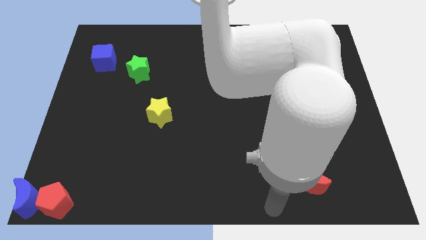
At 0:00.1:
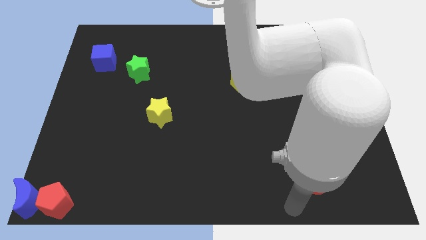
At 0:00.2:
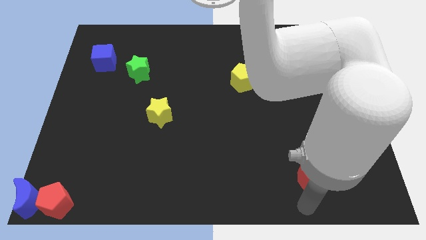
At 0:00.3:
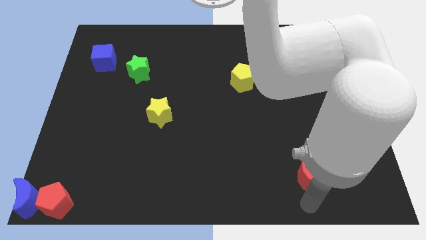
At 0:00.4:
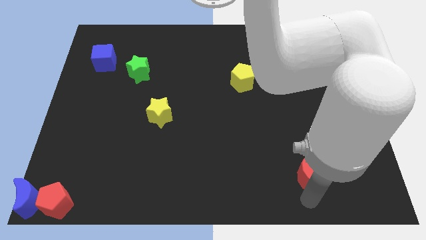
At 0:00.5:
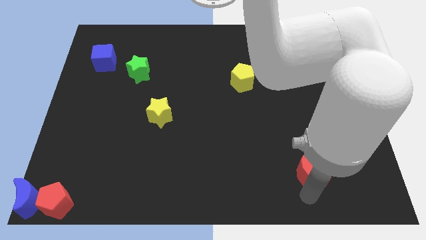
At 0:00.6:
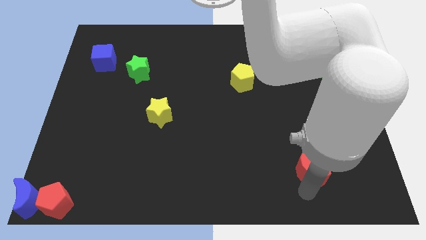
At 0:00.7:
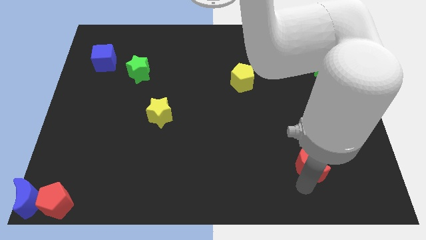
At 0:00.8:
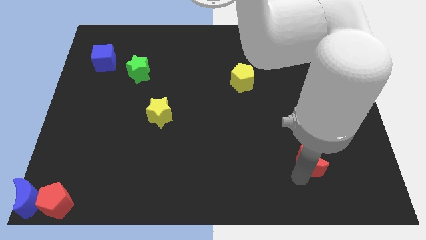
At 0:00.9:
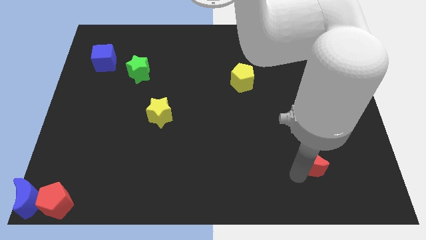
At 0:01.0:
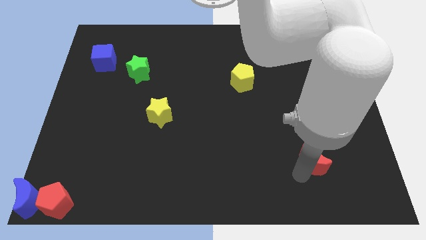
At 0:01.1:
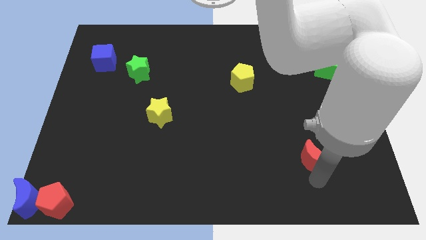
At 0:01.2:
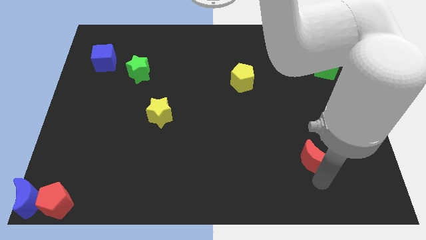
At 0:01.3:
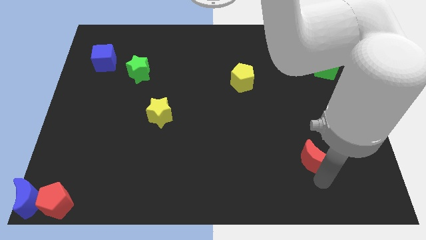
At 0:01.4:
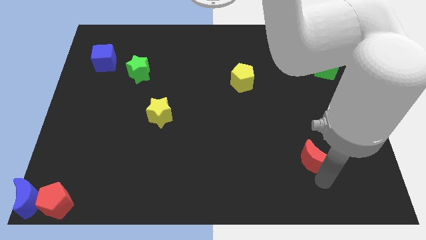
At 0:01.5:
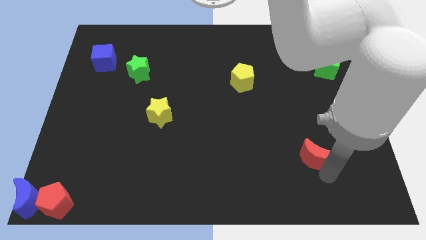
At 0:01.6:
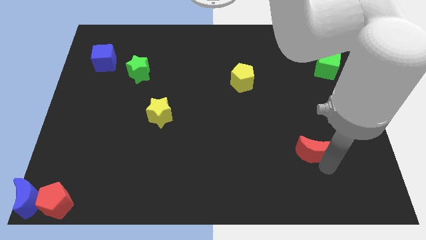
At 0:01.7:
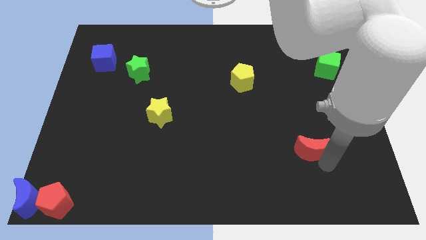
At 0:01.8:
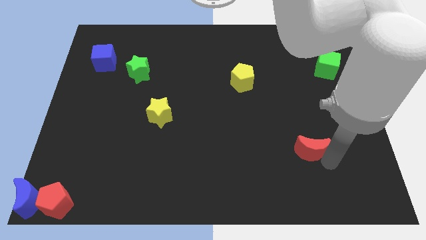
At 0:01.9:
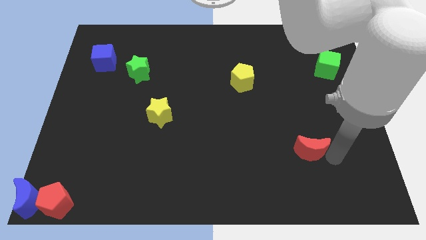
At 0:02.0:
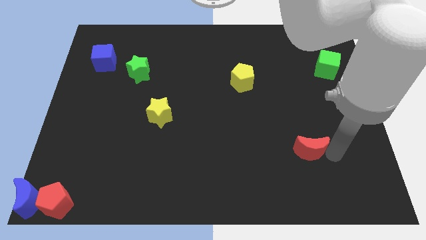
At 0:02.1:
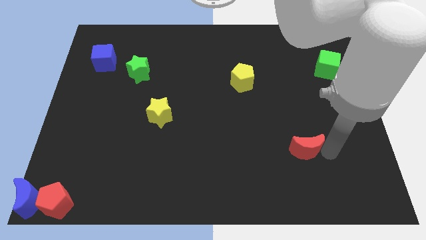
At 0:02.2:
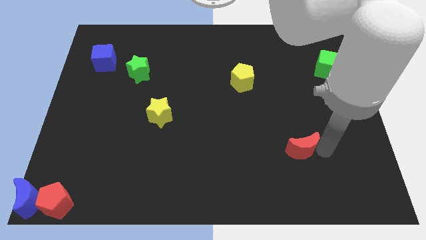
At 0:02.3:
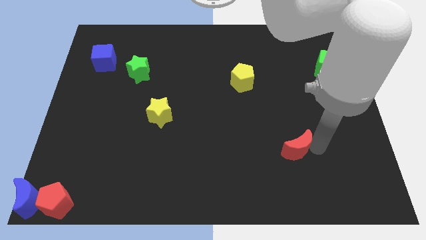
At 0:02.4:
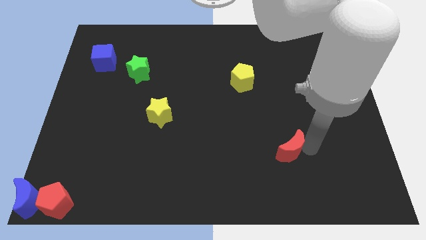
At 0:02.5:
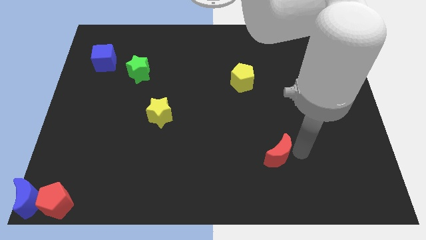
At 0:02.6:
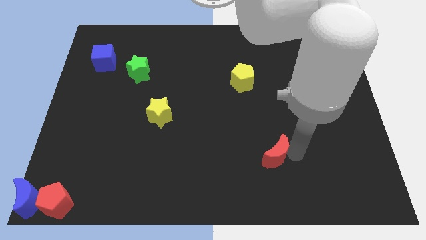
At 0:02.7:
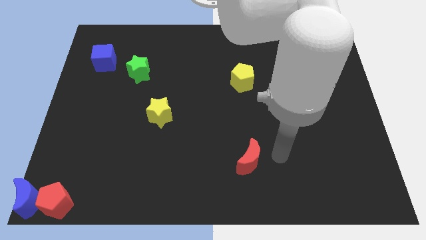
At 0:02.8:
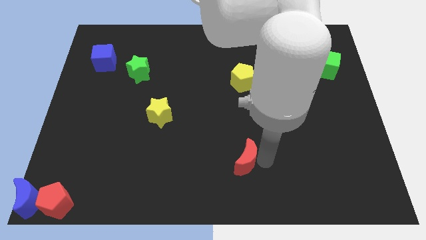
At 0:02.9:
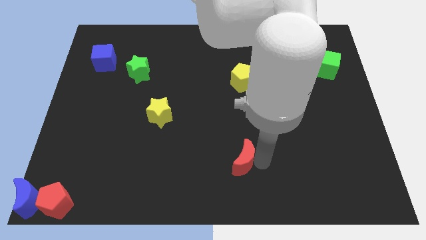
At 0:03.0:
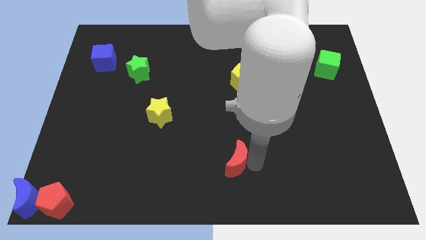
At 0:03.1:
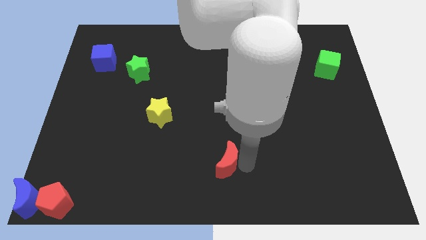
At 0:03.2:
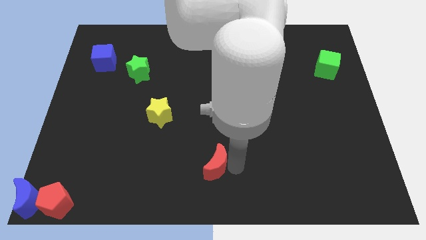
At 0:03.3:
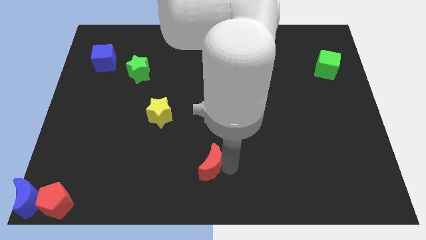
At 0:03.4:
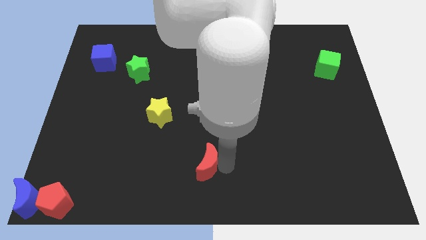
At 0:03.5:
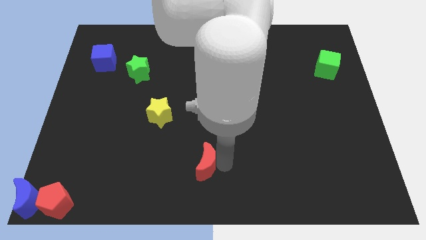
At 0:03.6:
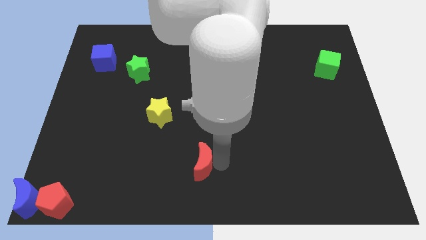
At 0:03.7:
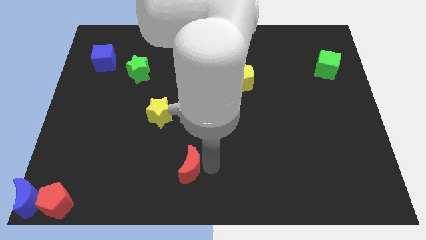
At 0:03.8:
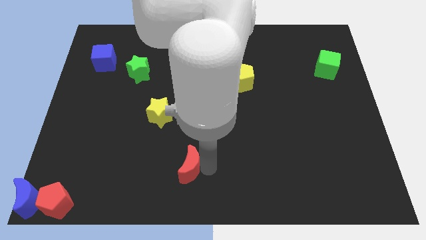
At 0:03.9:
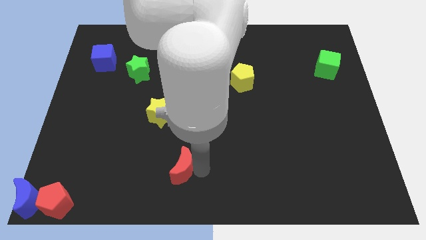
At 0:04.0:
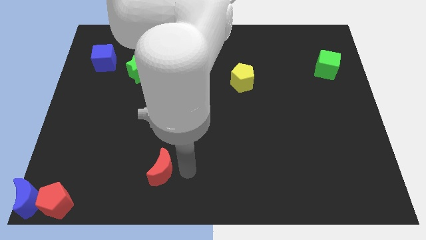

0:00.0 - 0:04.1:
place the red moon below the yellow star

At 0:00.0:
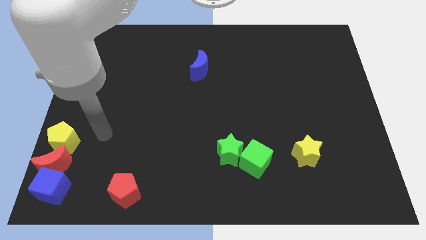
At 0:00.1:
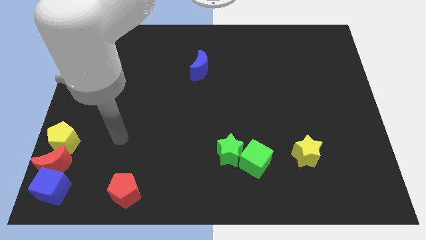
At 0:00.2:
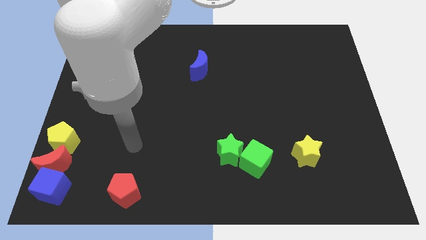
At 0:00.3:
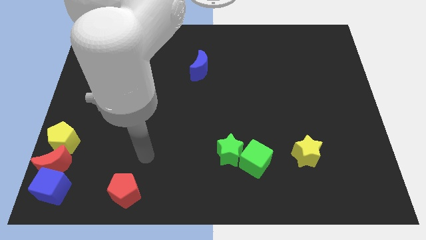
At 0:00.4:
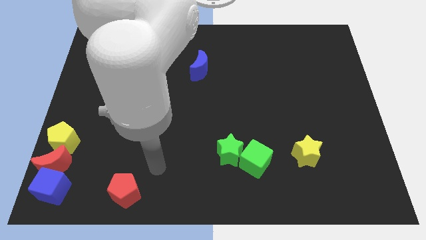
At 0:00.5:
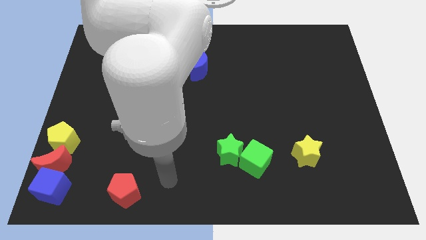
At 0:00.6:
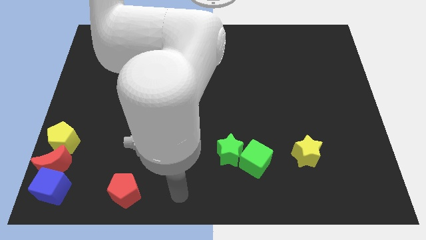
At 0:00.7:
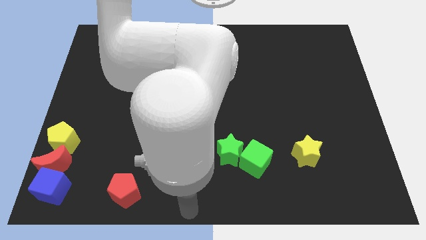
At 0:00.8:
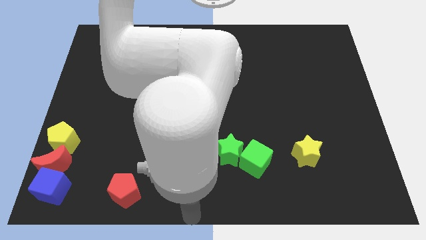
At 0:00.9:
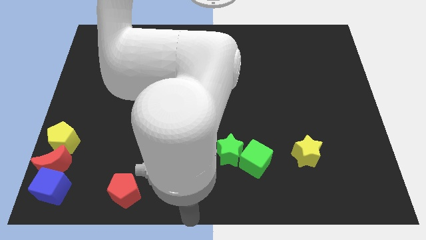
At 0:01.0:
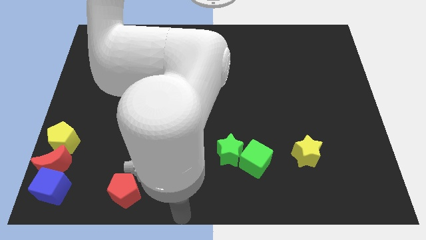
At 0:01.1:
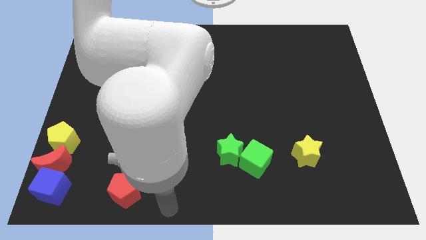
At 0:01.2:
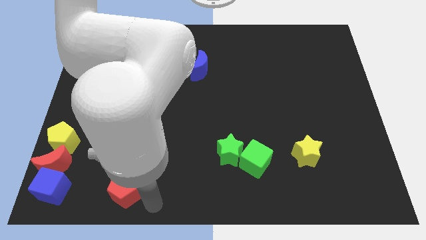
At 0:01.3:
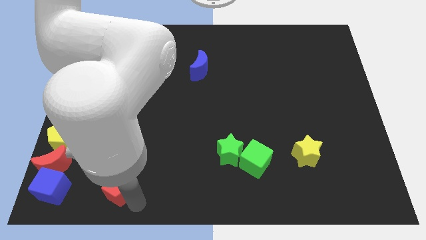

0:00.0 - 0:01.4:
point arm to the right of the red pentagon

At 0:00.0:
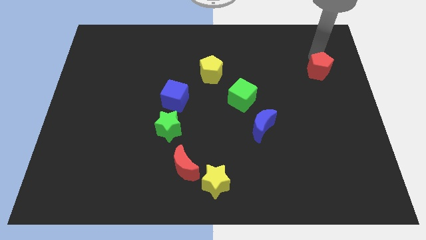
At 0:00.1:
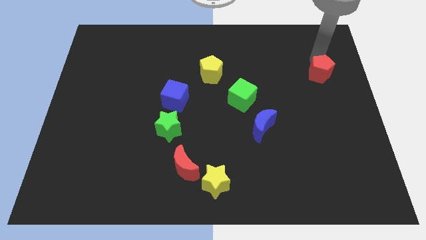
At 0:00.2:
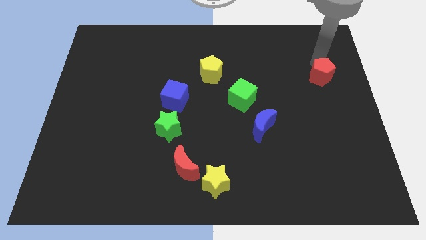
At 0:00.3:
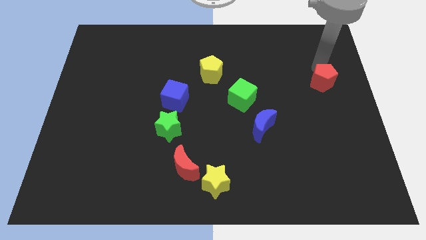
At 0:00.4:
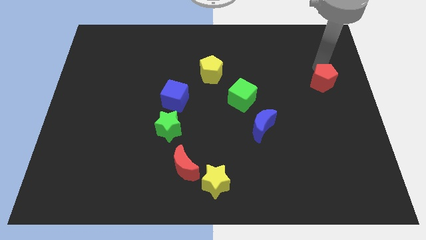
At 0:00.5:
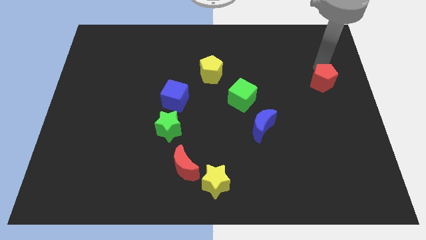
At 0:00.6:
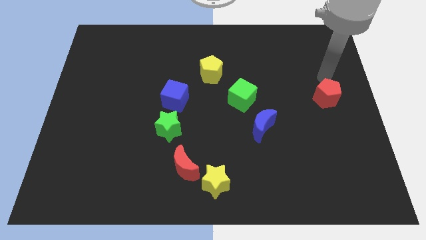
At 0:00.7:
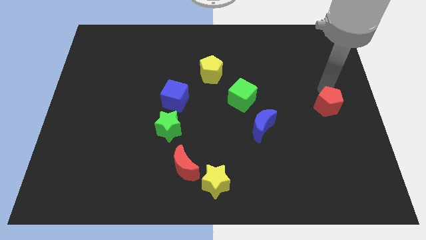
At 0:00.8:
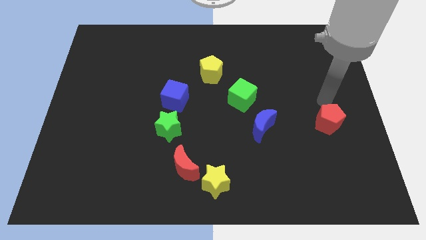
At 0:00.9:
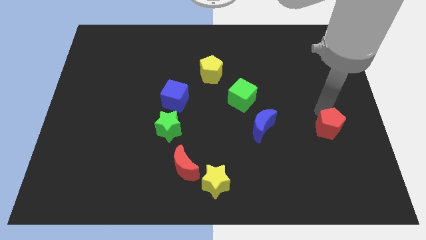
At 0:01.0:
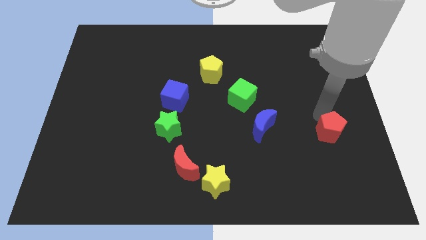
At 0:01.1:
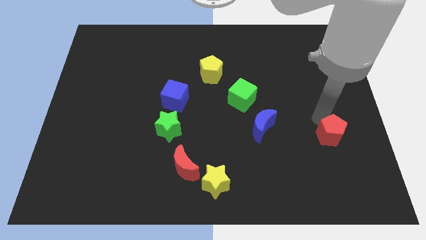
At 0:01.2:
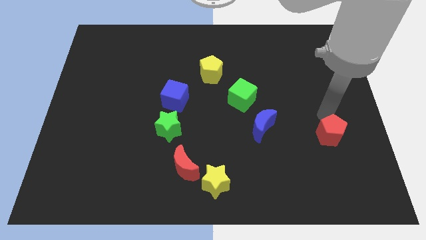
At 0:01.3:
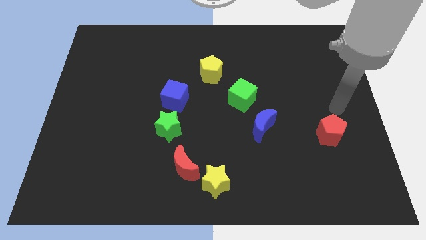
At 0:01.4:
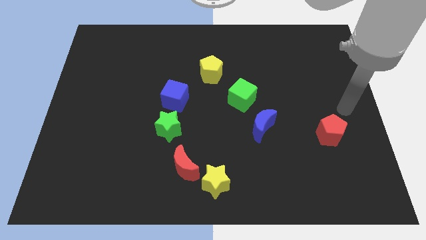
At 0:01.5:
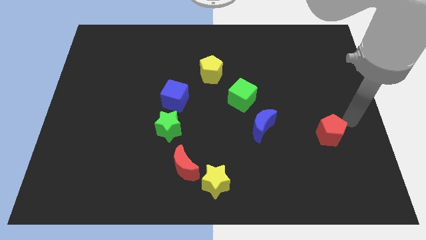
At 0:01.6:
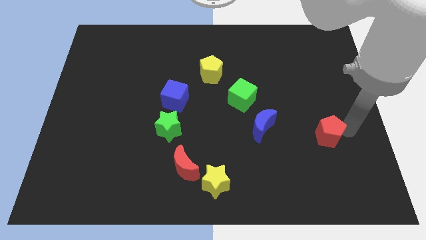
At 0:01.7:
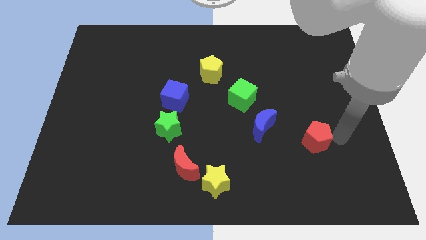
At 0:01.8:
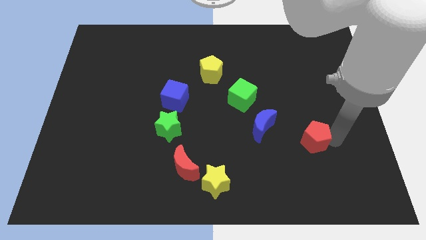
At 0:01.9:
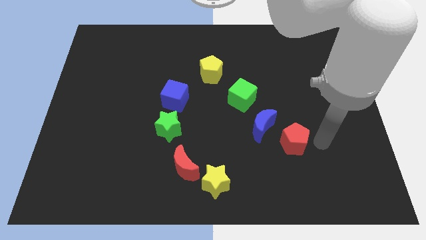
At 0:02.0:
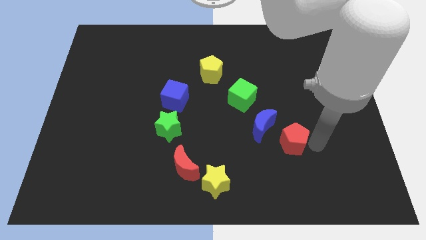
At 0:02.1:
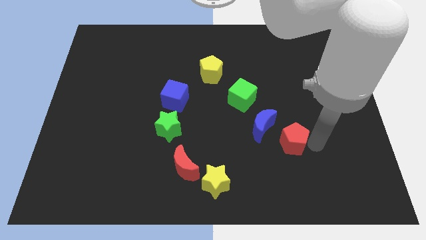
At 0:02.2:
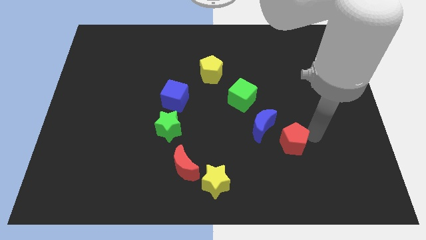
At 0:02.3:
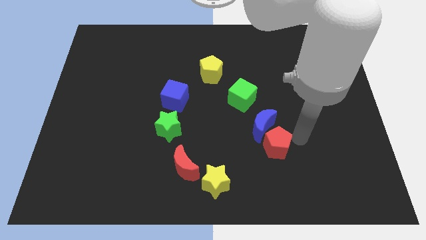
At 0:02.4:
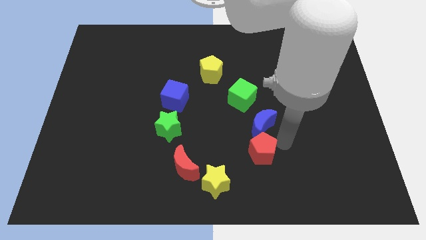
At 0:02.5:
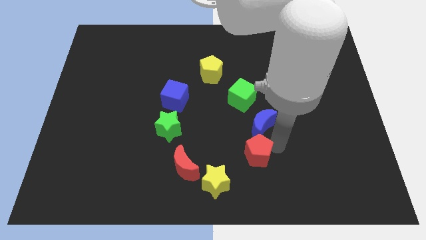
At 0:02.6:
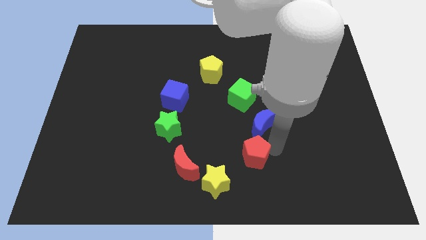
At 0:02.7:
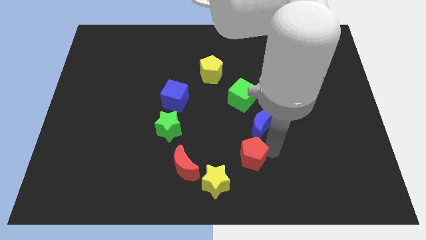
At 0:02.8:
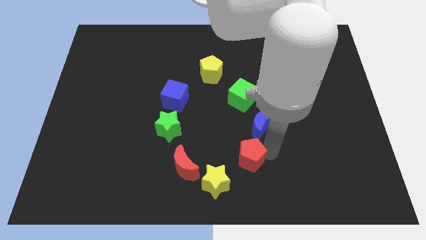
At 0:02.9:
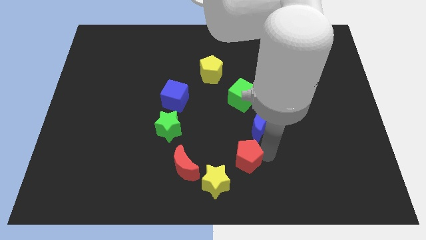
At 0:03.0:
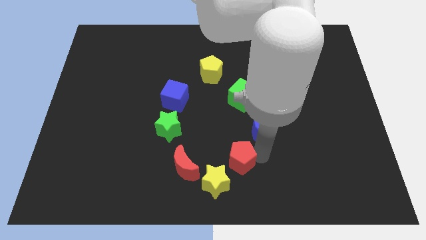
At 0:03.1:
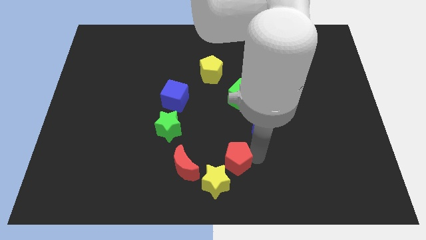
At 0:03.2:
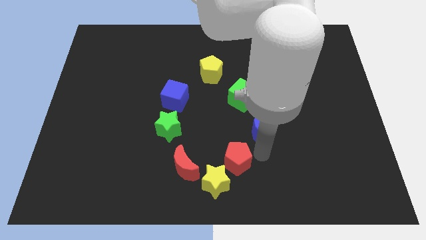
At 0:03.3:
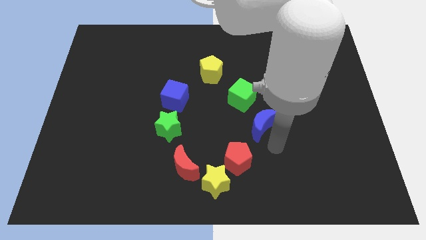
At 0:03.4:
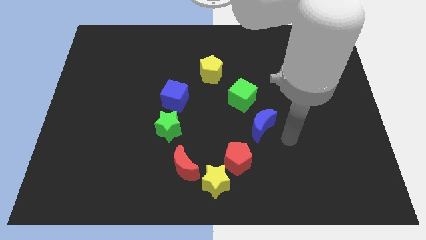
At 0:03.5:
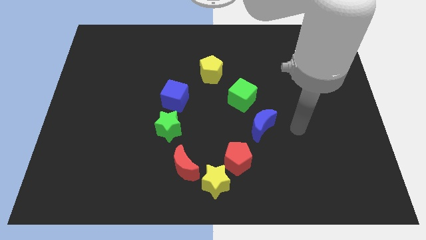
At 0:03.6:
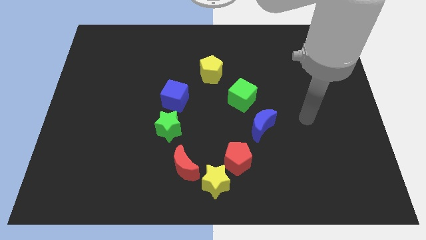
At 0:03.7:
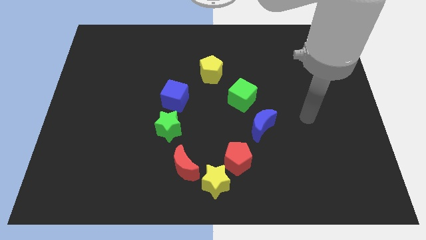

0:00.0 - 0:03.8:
place the red pentagon between blue moon and yellow star
